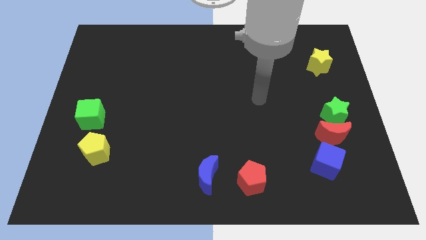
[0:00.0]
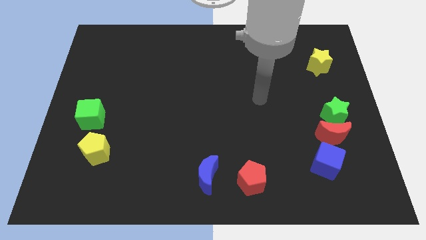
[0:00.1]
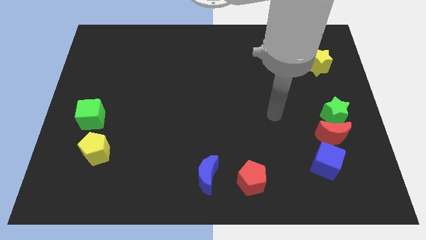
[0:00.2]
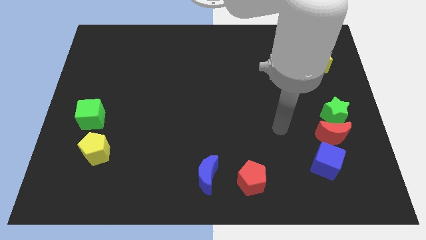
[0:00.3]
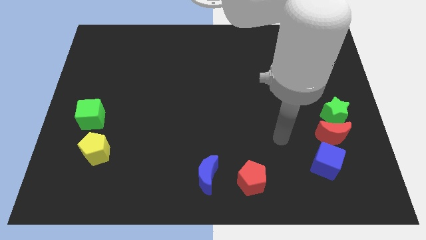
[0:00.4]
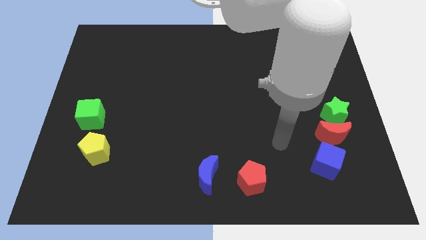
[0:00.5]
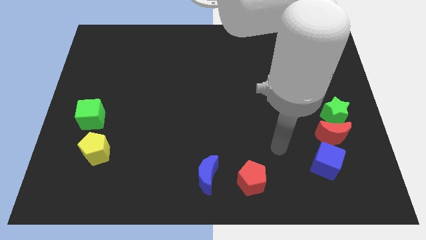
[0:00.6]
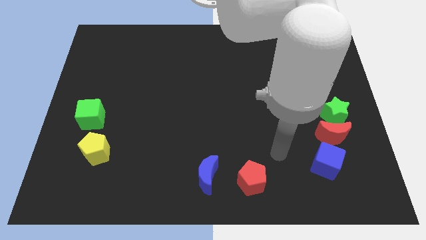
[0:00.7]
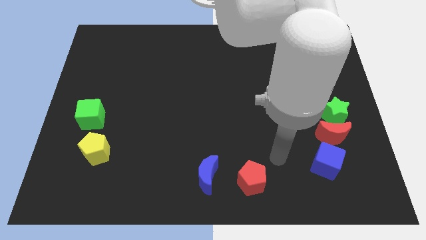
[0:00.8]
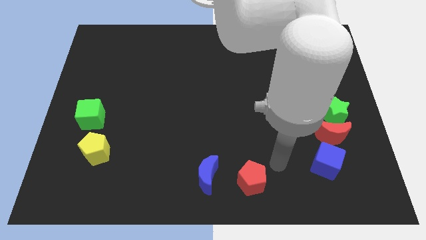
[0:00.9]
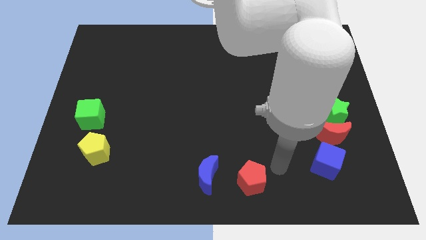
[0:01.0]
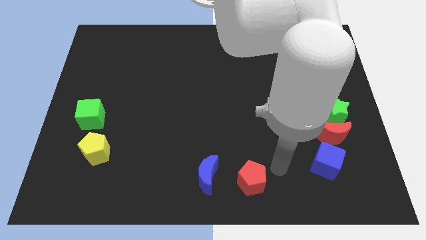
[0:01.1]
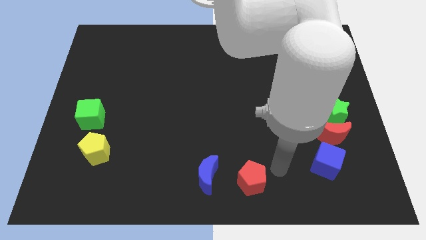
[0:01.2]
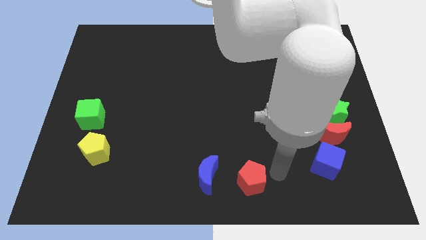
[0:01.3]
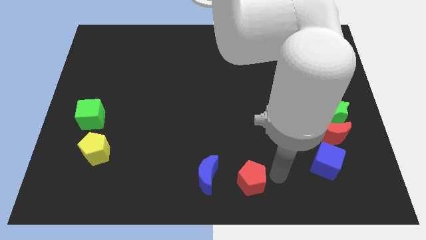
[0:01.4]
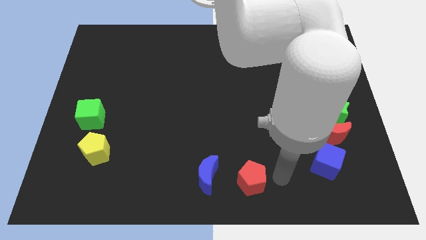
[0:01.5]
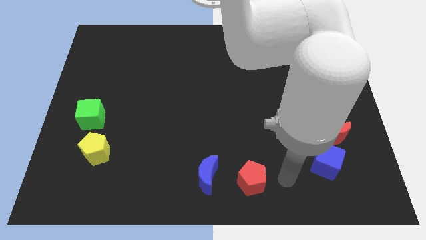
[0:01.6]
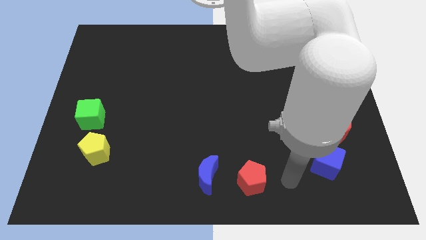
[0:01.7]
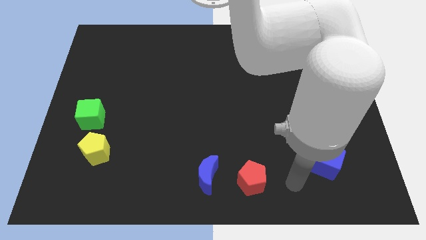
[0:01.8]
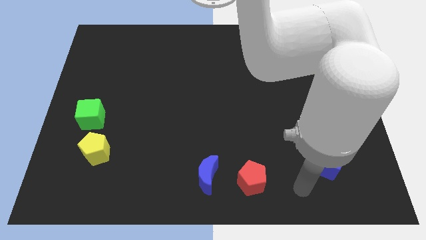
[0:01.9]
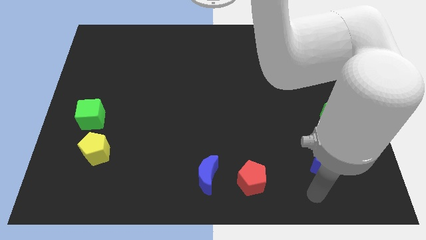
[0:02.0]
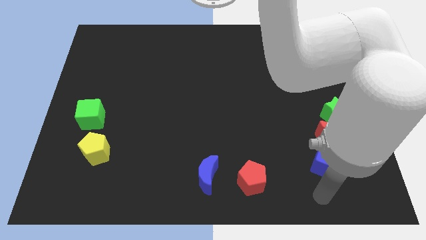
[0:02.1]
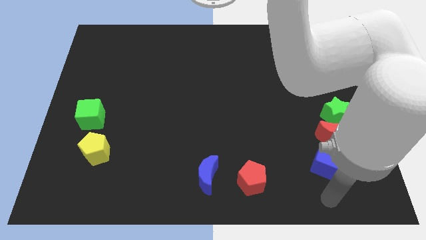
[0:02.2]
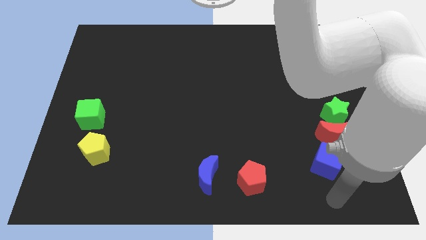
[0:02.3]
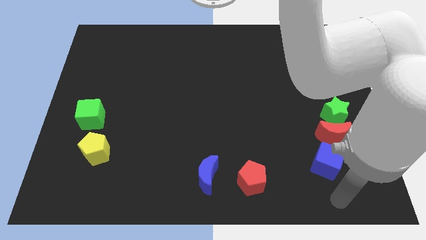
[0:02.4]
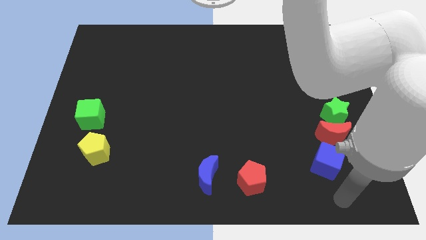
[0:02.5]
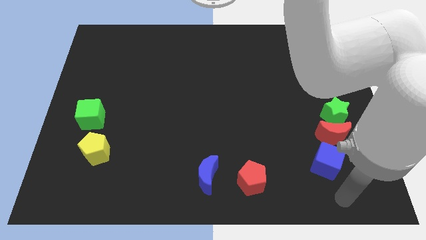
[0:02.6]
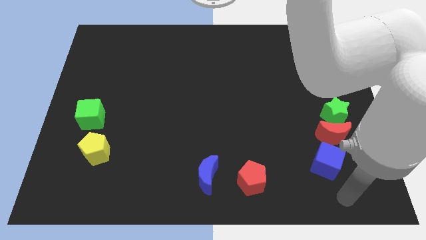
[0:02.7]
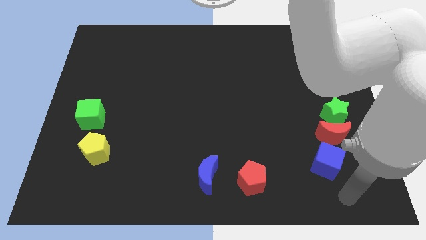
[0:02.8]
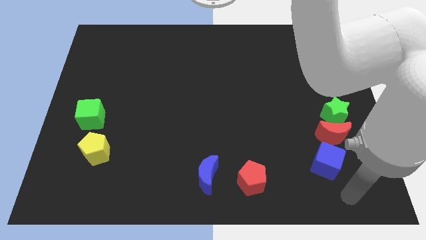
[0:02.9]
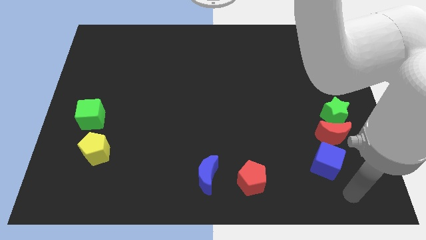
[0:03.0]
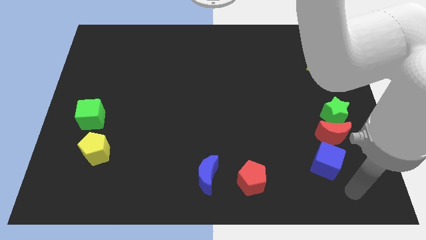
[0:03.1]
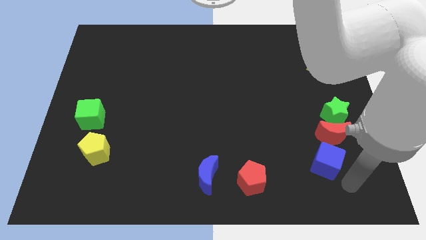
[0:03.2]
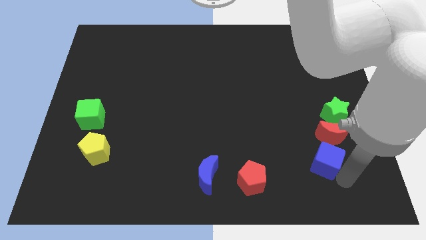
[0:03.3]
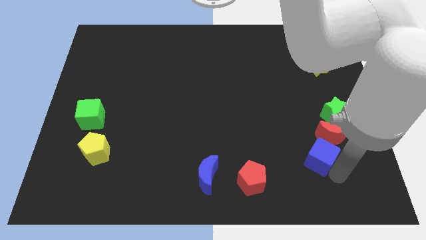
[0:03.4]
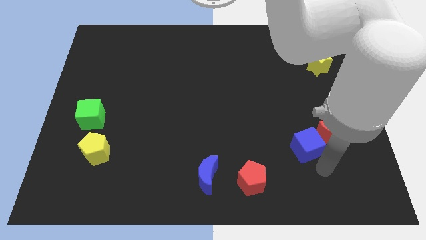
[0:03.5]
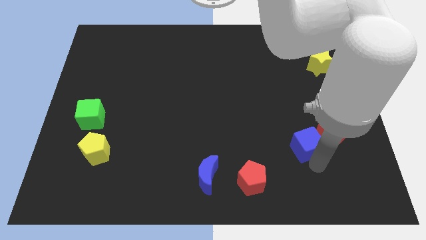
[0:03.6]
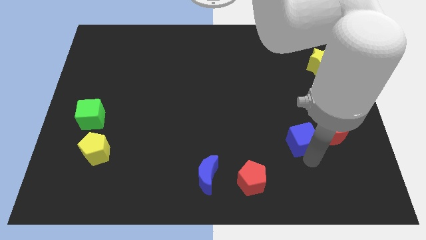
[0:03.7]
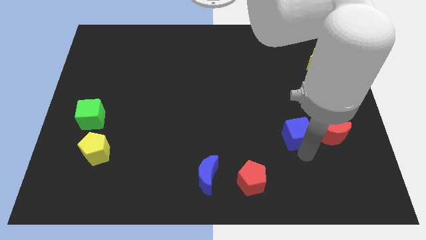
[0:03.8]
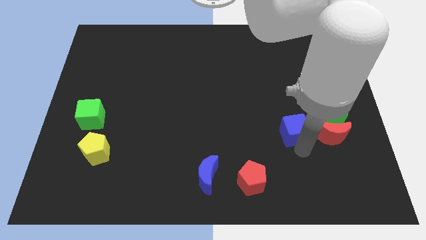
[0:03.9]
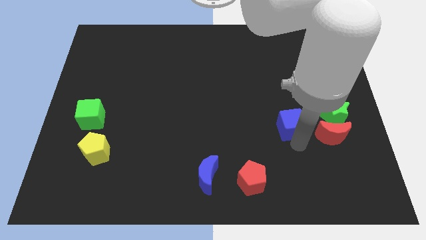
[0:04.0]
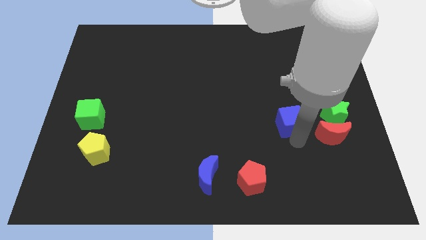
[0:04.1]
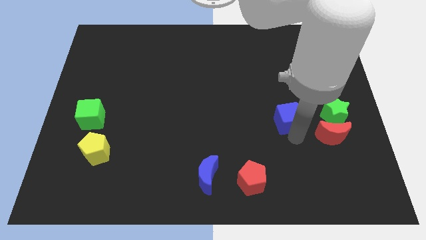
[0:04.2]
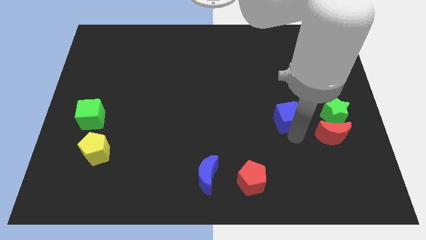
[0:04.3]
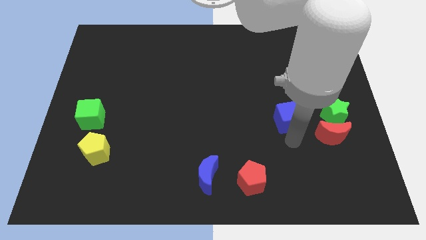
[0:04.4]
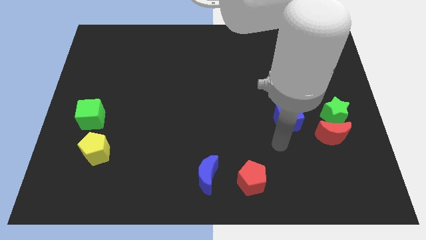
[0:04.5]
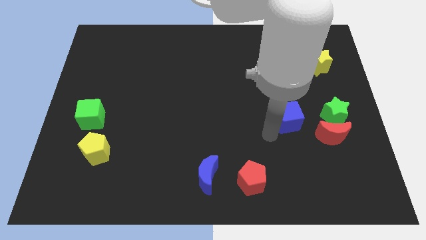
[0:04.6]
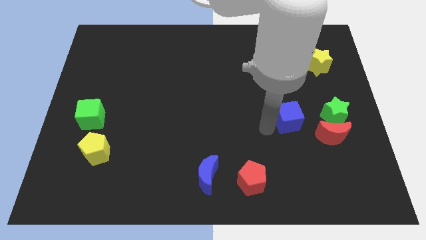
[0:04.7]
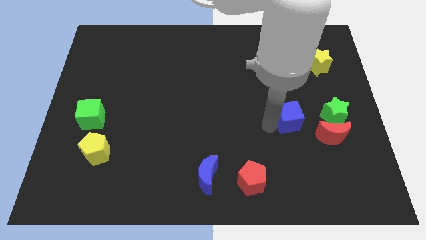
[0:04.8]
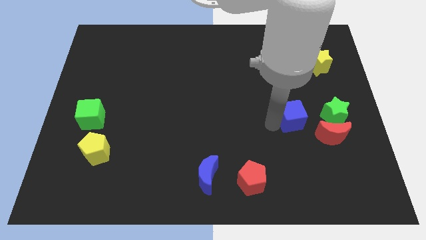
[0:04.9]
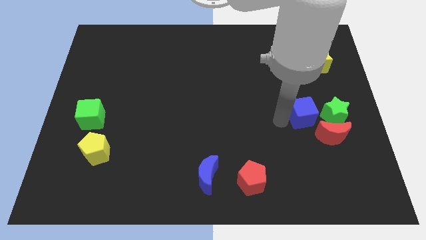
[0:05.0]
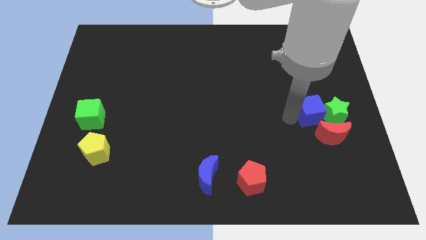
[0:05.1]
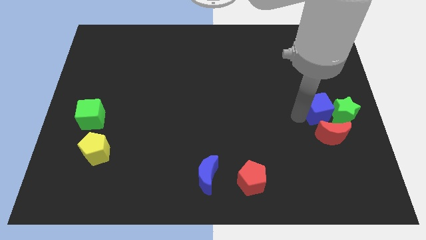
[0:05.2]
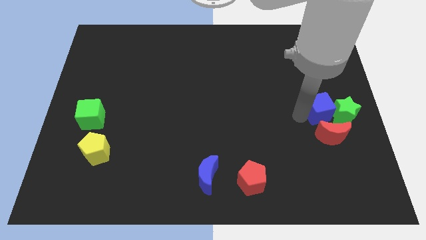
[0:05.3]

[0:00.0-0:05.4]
move the blue cube close to the green star

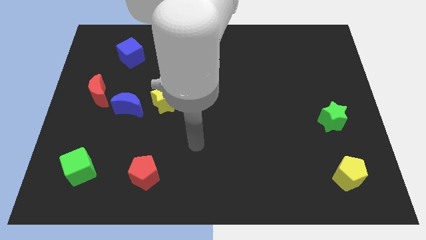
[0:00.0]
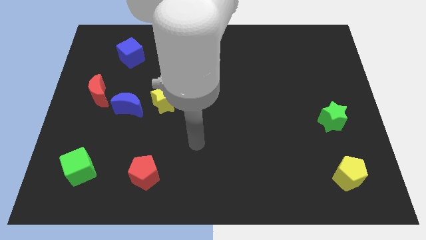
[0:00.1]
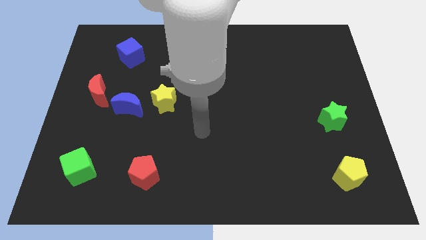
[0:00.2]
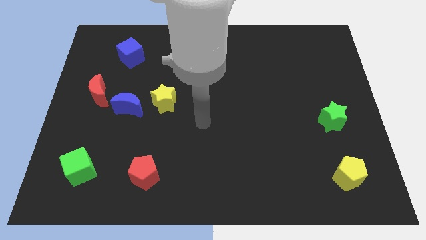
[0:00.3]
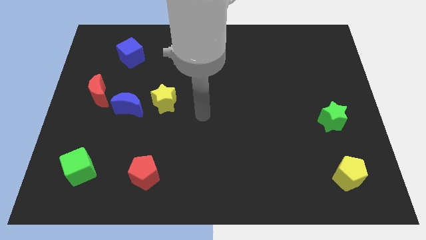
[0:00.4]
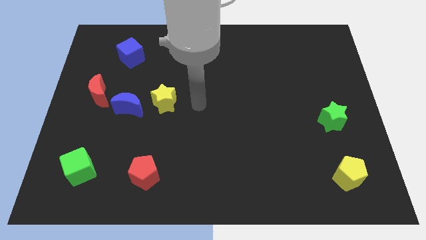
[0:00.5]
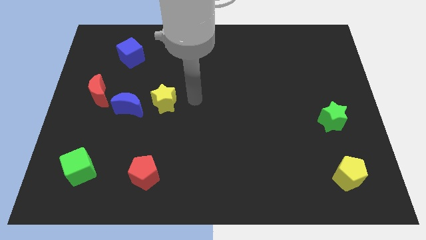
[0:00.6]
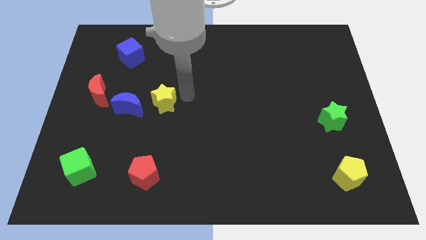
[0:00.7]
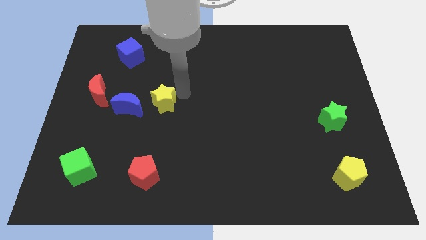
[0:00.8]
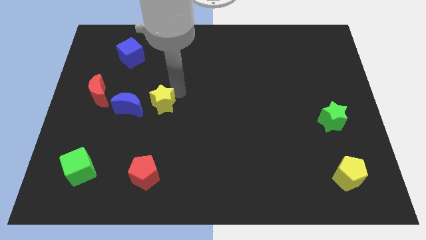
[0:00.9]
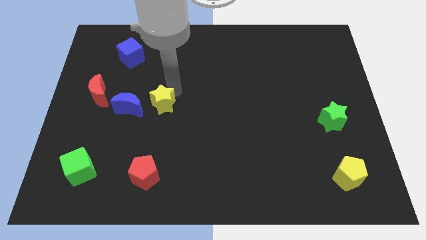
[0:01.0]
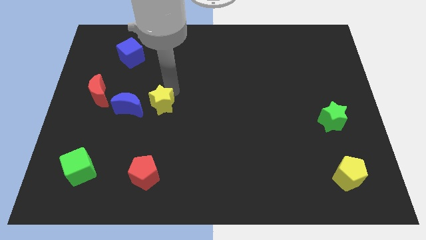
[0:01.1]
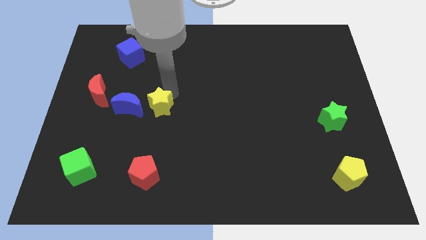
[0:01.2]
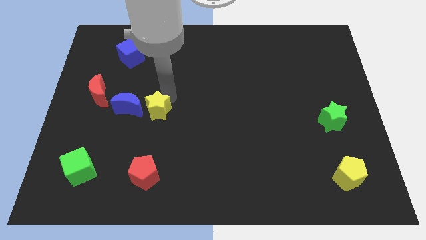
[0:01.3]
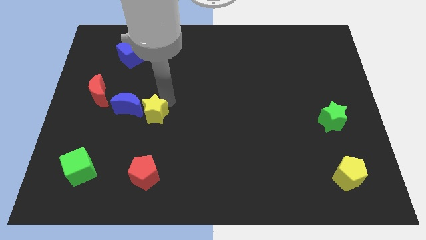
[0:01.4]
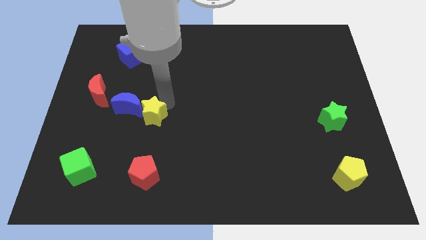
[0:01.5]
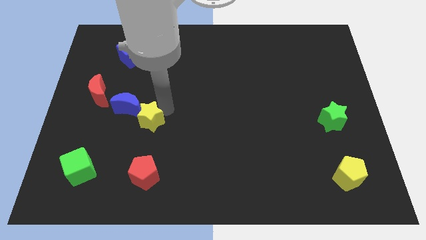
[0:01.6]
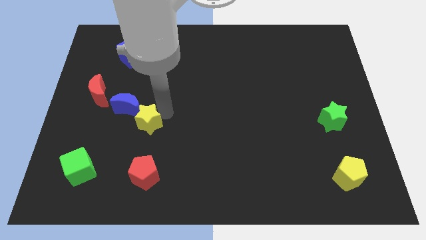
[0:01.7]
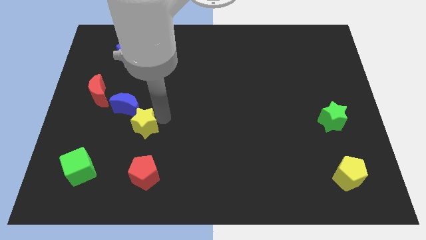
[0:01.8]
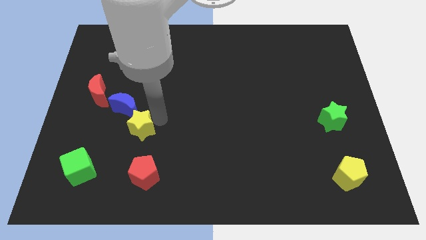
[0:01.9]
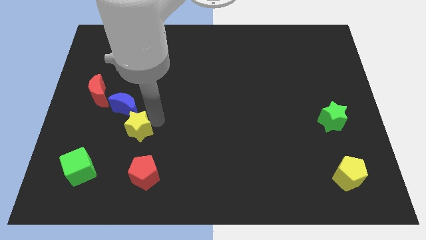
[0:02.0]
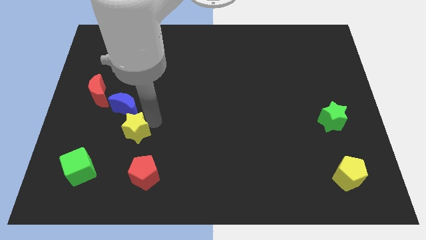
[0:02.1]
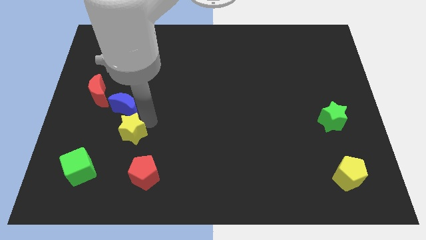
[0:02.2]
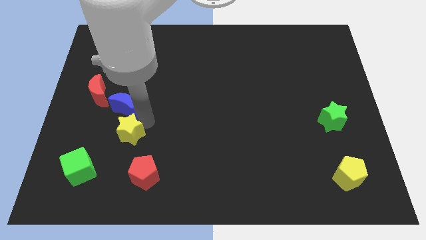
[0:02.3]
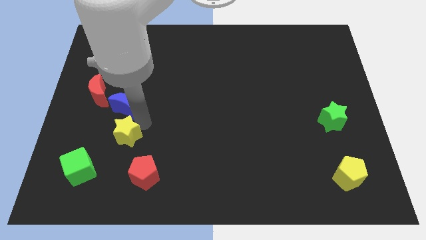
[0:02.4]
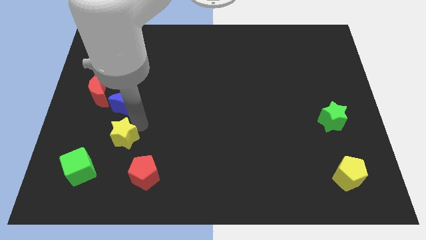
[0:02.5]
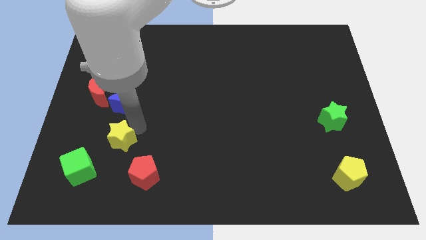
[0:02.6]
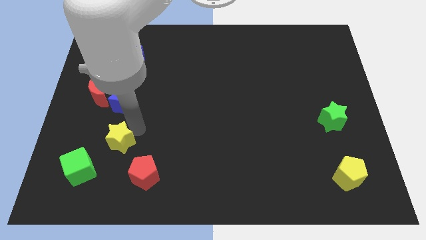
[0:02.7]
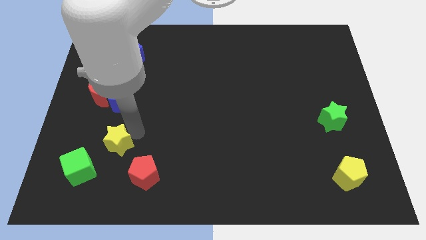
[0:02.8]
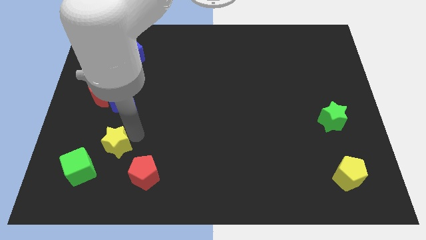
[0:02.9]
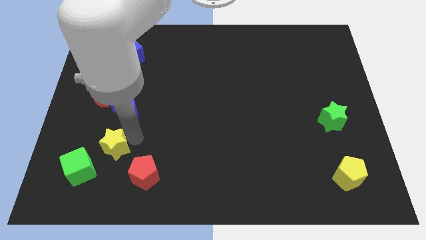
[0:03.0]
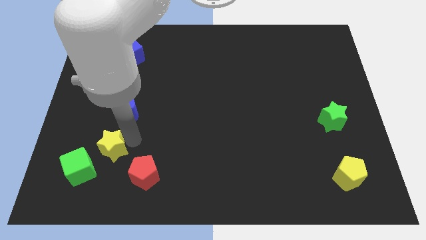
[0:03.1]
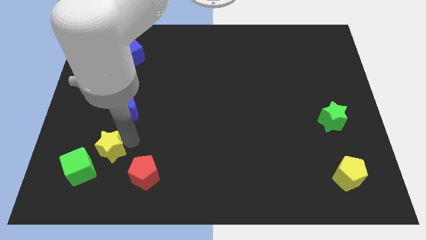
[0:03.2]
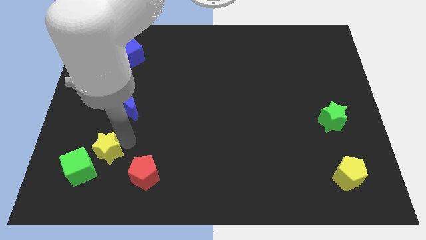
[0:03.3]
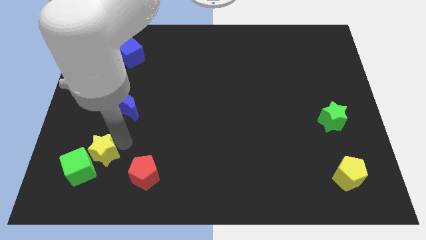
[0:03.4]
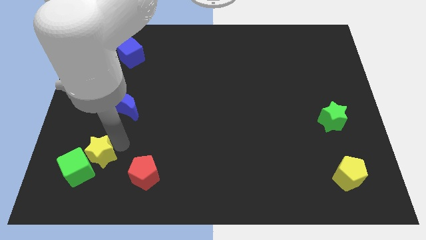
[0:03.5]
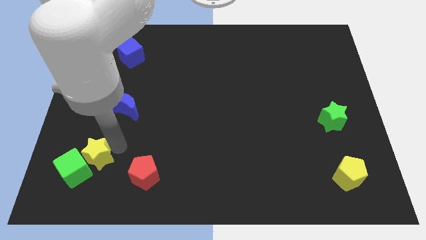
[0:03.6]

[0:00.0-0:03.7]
push the yellow star towards the green cube
